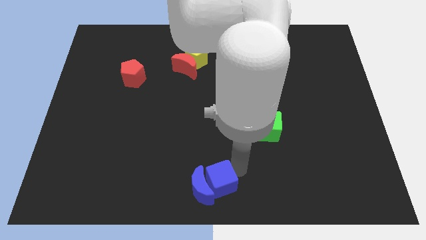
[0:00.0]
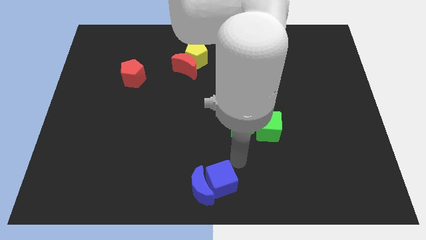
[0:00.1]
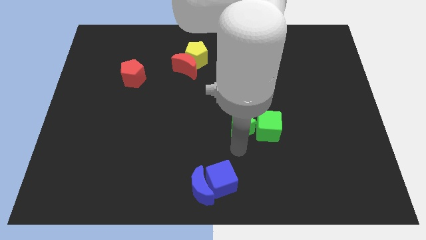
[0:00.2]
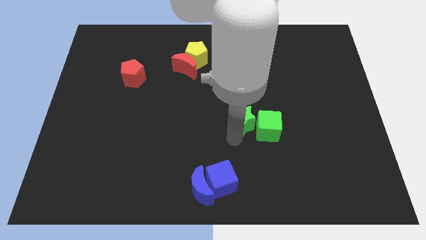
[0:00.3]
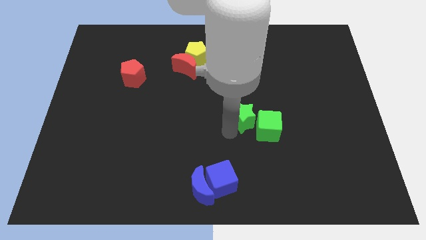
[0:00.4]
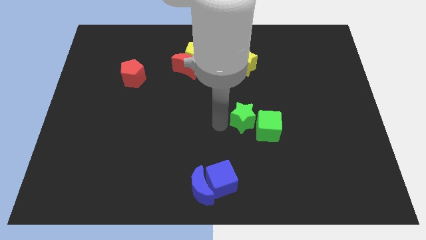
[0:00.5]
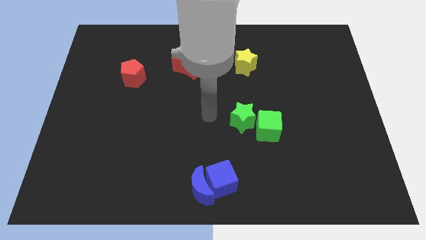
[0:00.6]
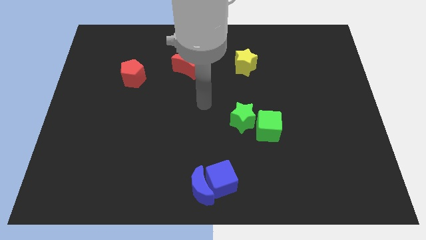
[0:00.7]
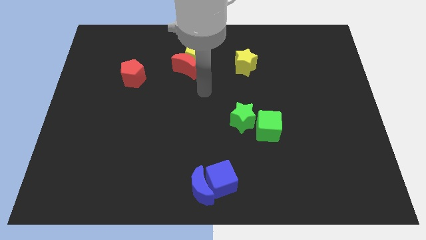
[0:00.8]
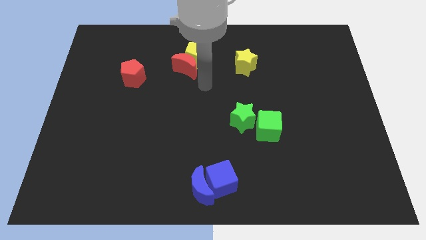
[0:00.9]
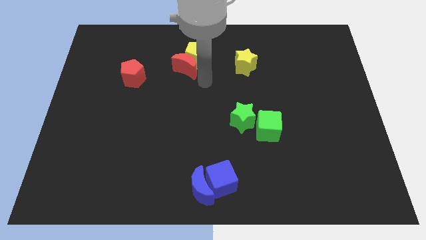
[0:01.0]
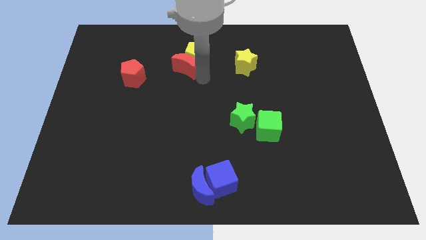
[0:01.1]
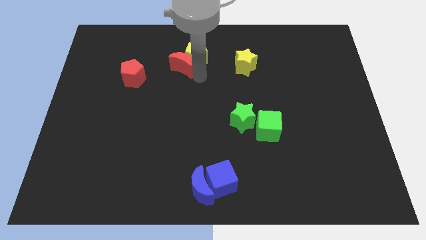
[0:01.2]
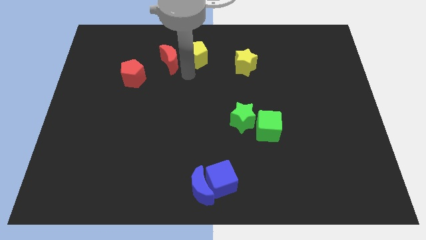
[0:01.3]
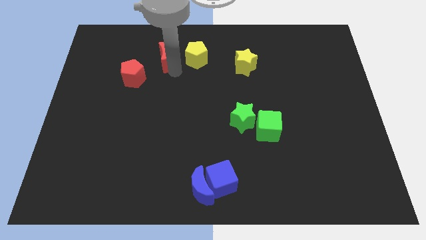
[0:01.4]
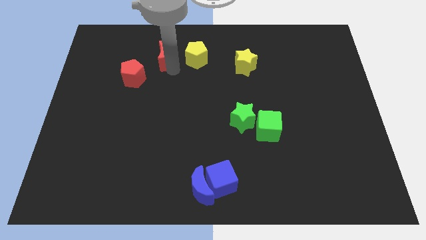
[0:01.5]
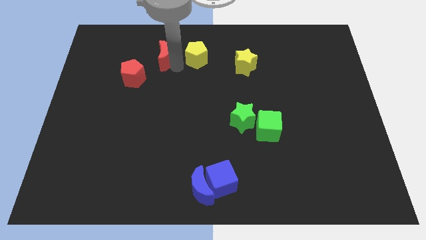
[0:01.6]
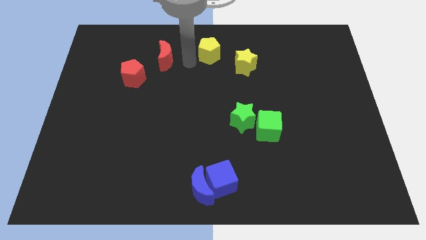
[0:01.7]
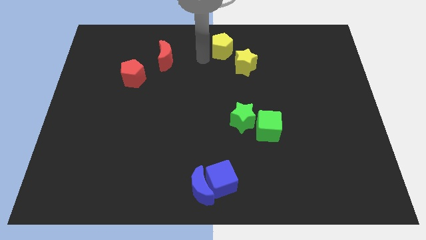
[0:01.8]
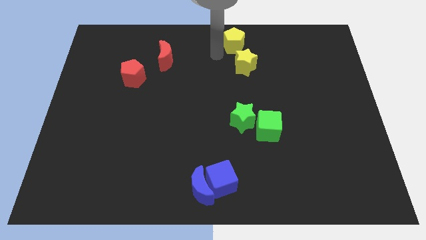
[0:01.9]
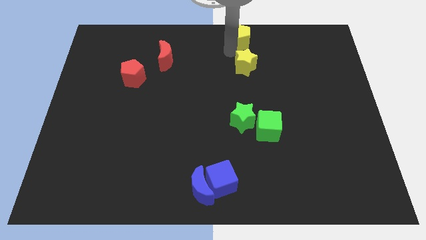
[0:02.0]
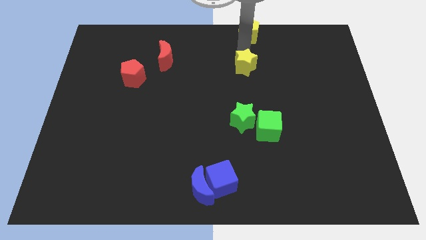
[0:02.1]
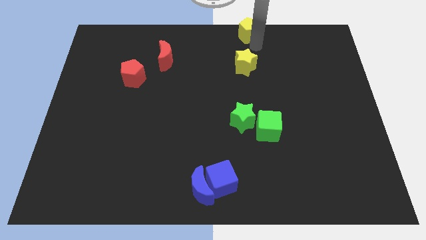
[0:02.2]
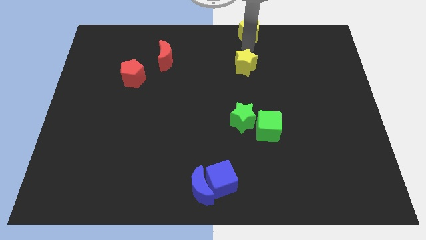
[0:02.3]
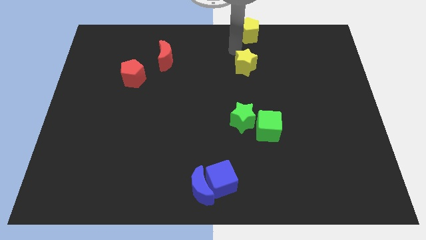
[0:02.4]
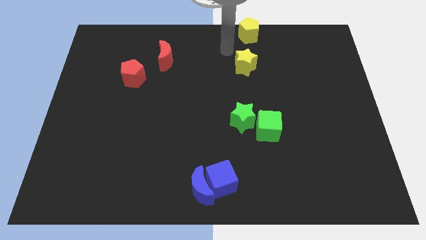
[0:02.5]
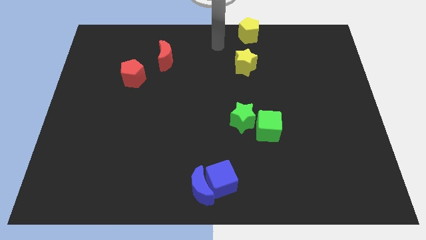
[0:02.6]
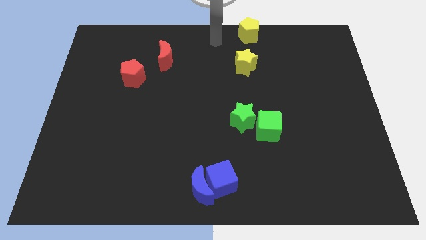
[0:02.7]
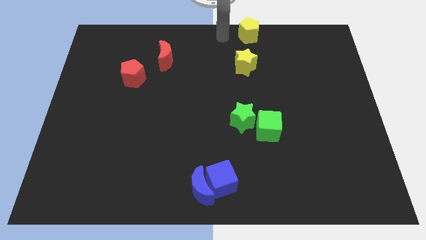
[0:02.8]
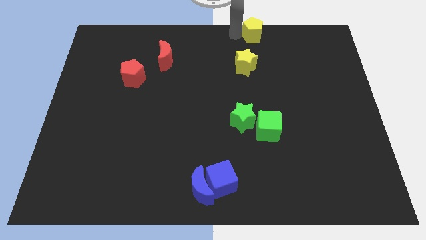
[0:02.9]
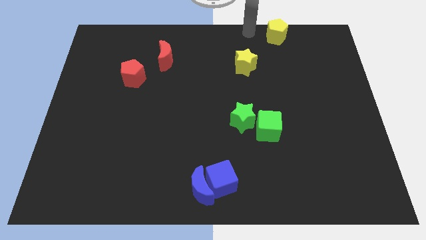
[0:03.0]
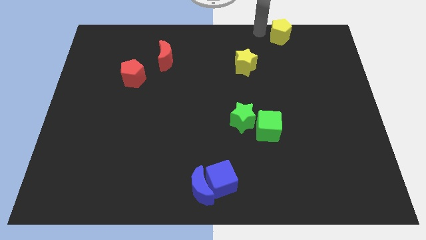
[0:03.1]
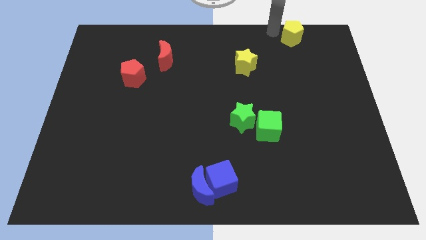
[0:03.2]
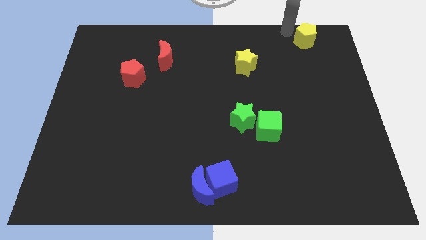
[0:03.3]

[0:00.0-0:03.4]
separate the red moon and the yellow pentagon

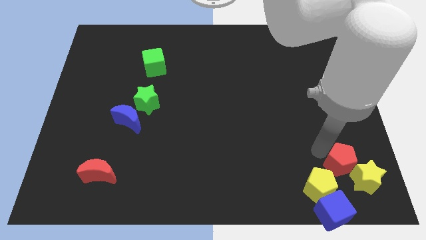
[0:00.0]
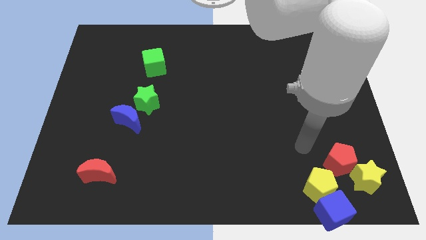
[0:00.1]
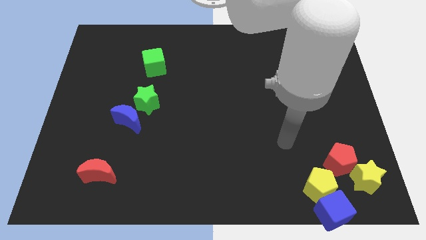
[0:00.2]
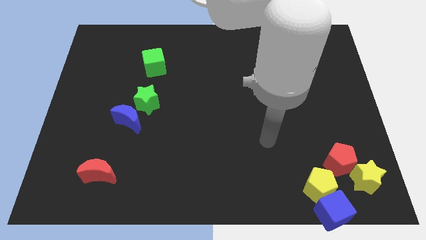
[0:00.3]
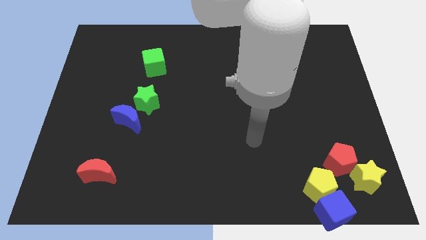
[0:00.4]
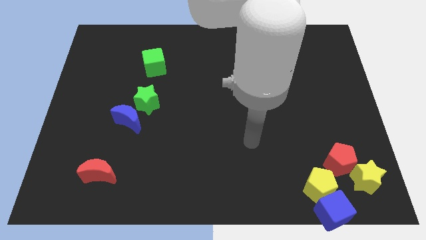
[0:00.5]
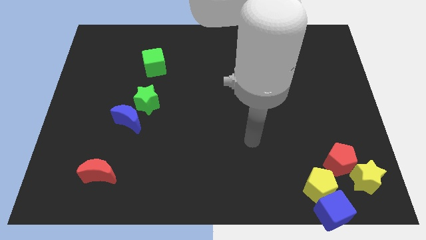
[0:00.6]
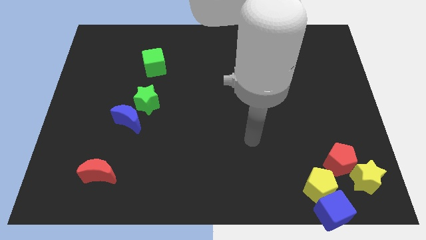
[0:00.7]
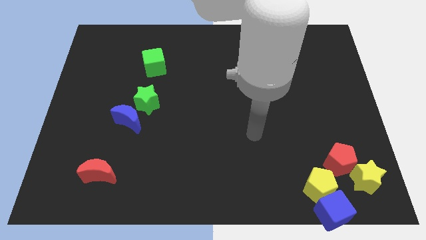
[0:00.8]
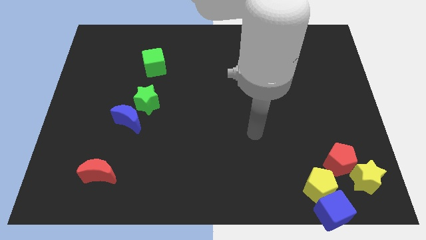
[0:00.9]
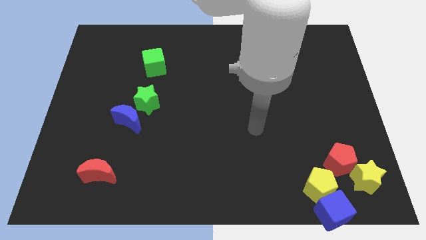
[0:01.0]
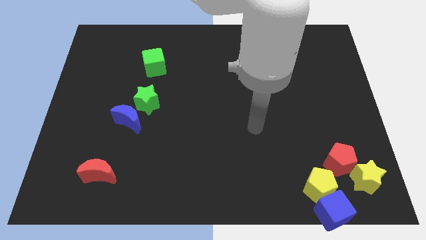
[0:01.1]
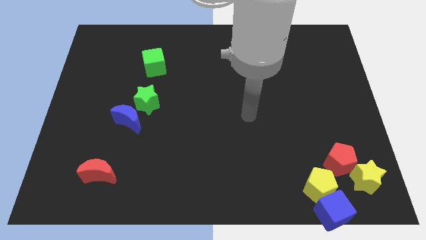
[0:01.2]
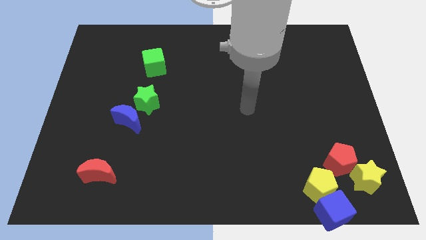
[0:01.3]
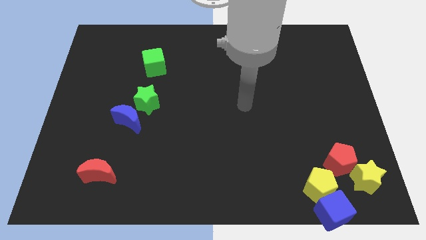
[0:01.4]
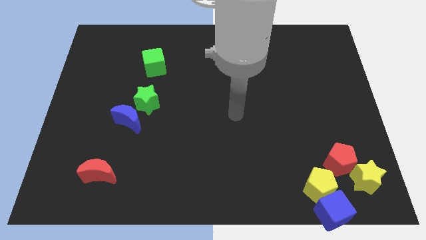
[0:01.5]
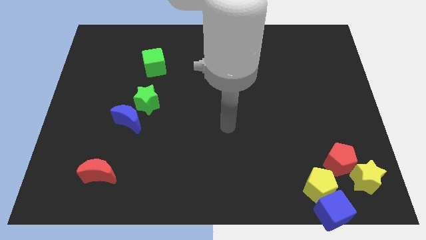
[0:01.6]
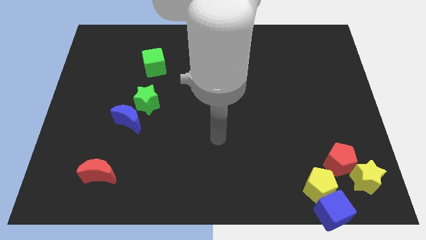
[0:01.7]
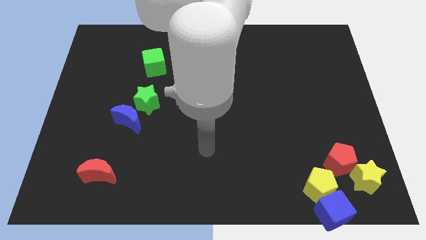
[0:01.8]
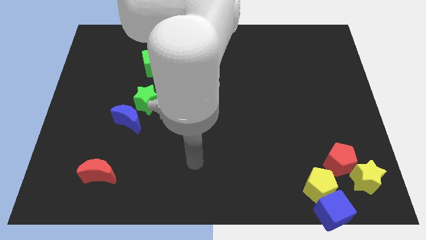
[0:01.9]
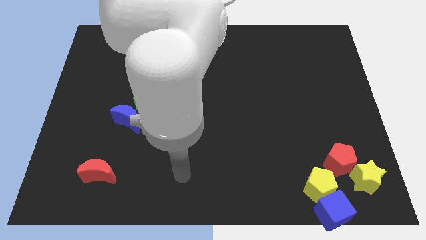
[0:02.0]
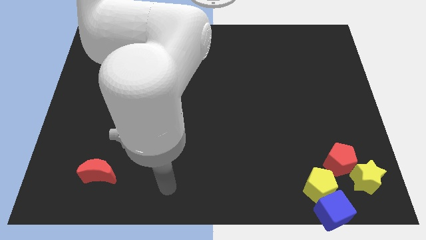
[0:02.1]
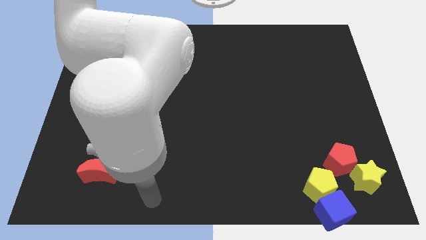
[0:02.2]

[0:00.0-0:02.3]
move the arm away from the red pentagon

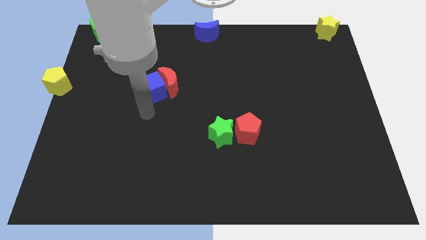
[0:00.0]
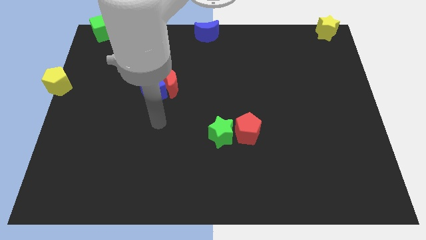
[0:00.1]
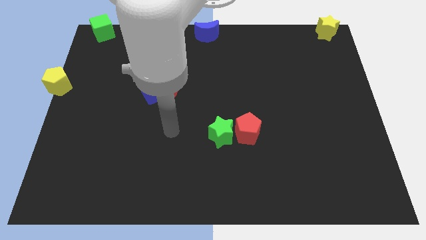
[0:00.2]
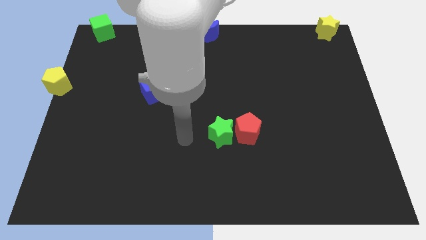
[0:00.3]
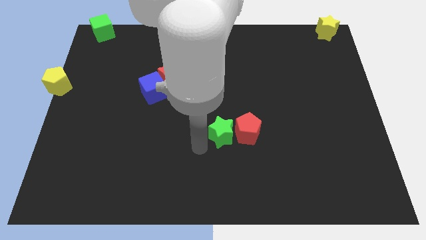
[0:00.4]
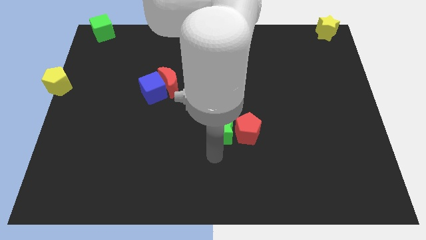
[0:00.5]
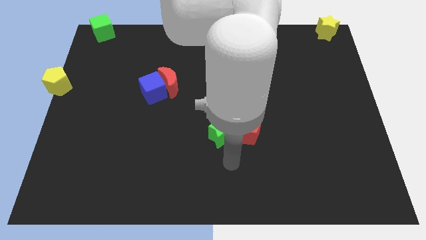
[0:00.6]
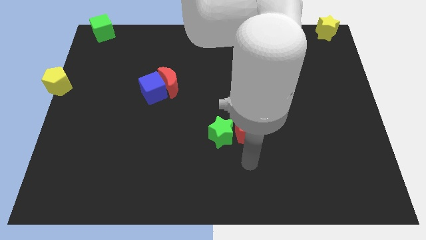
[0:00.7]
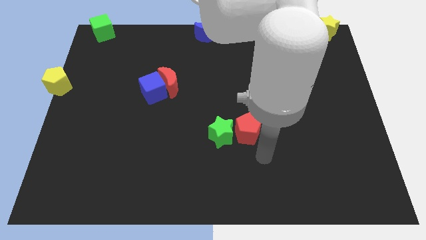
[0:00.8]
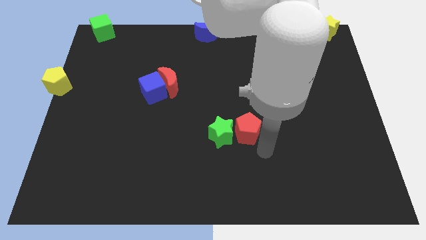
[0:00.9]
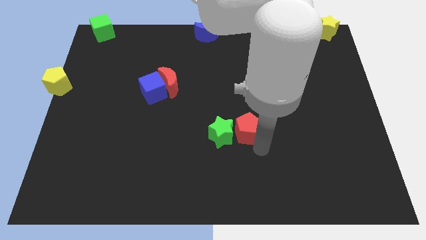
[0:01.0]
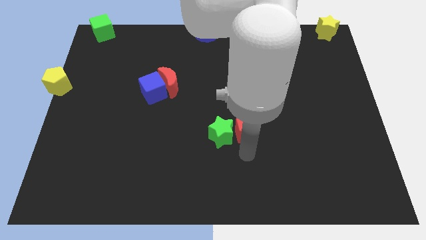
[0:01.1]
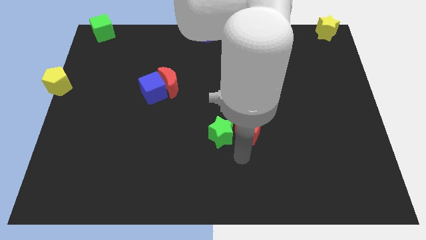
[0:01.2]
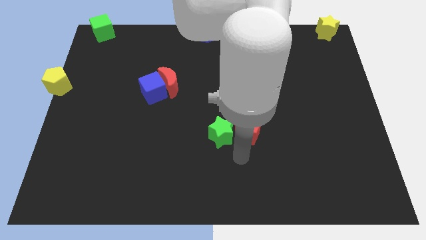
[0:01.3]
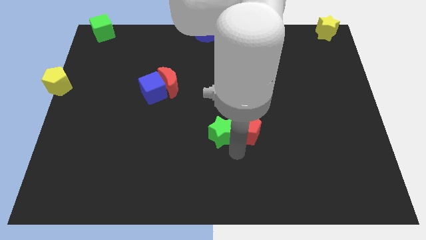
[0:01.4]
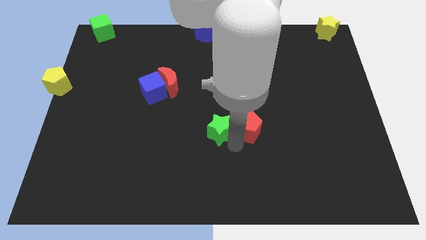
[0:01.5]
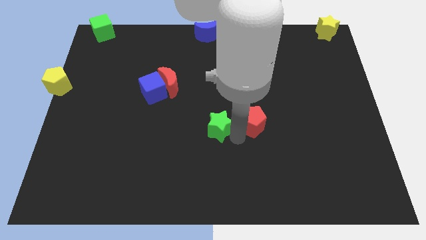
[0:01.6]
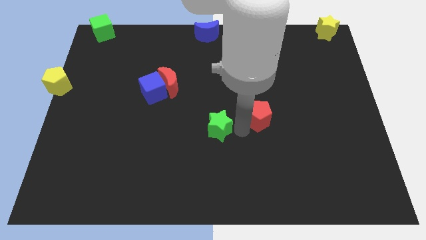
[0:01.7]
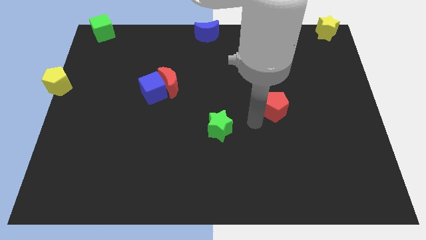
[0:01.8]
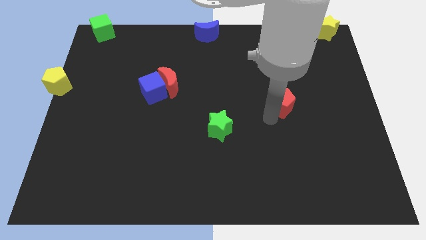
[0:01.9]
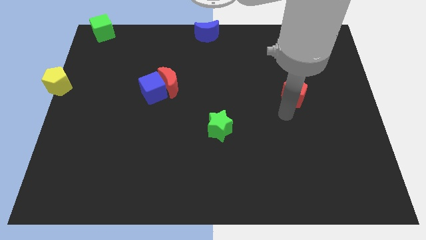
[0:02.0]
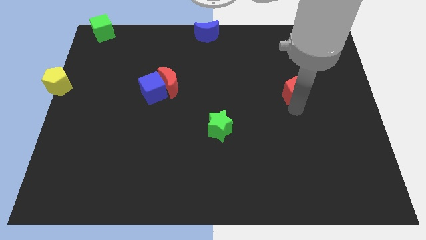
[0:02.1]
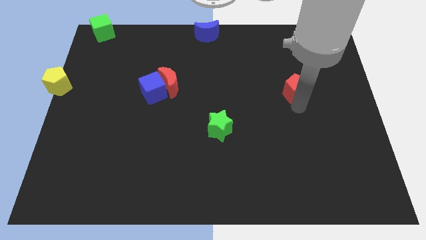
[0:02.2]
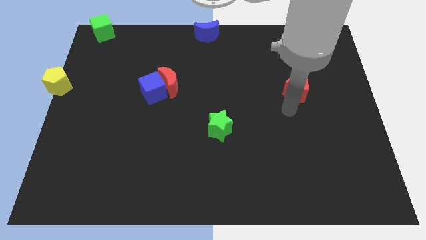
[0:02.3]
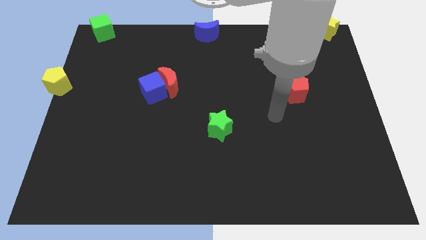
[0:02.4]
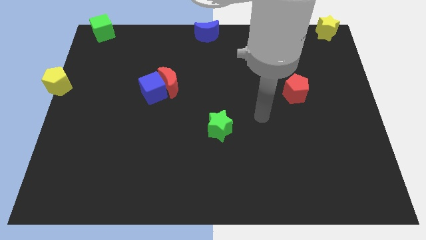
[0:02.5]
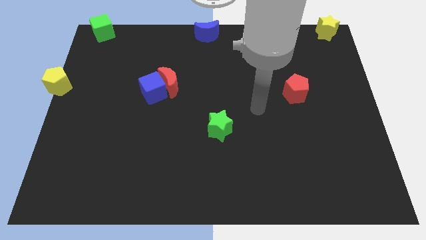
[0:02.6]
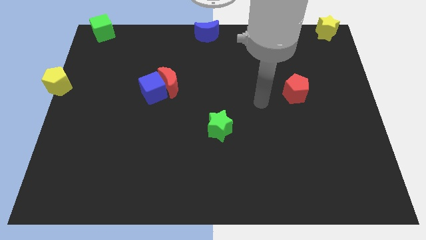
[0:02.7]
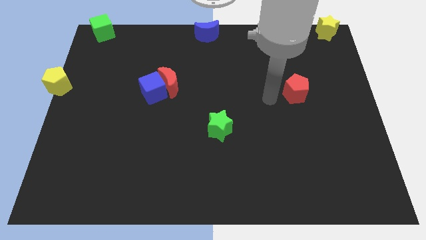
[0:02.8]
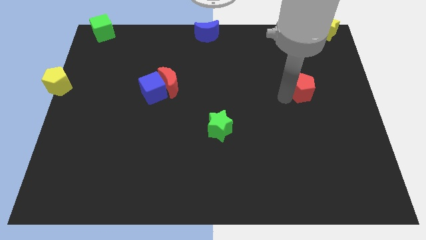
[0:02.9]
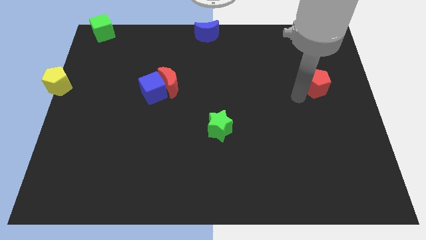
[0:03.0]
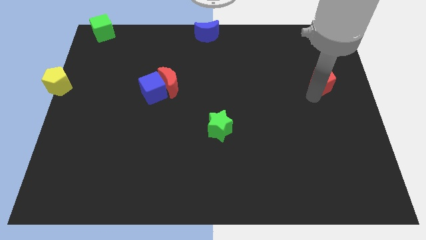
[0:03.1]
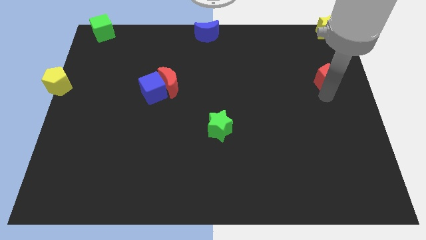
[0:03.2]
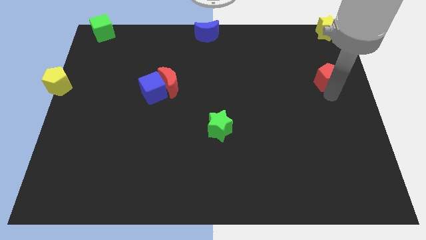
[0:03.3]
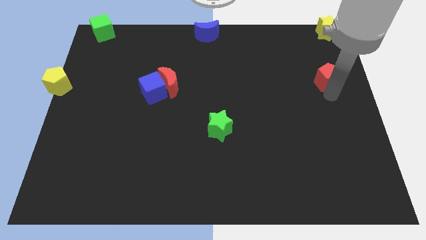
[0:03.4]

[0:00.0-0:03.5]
separate the red pentagon from the green star
